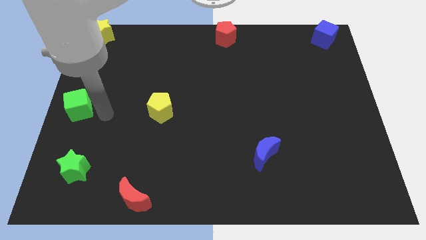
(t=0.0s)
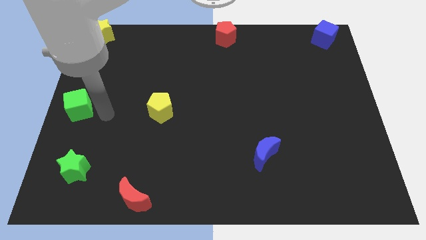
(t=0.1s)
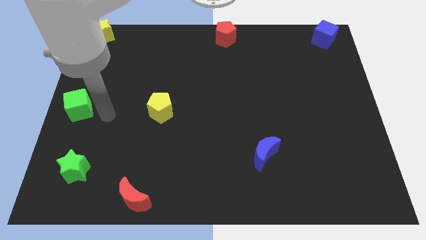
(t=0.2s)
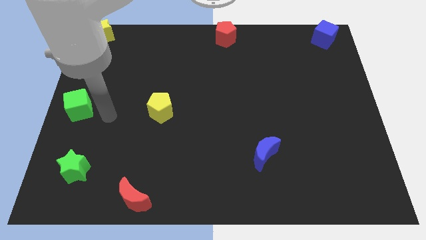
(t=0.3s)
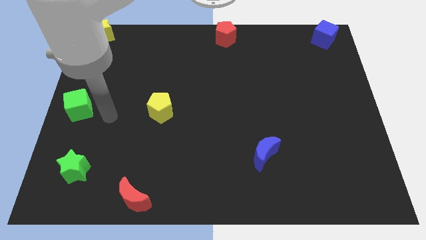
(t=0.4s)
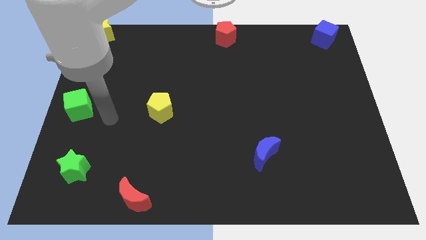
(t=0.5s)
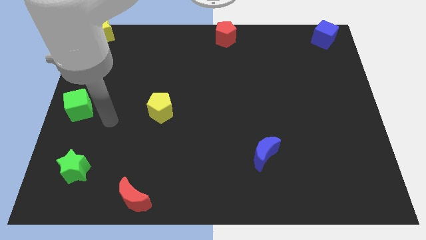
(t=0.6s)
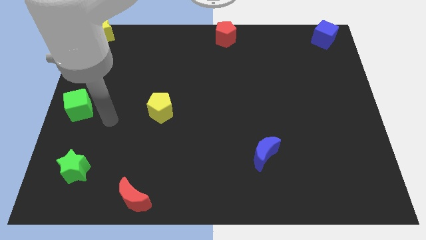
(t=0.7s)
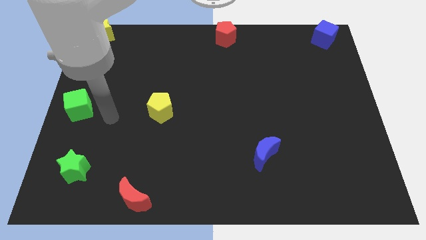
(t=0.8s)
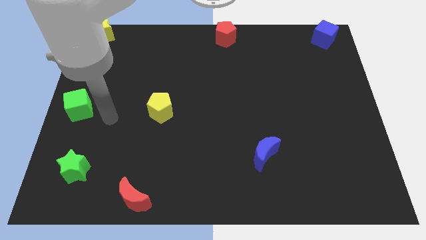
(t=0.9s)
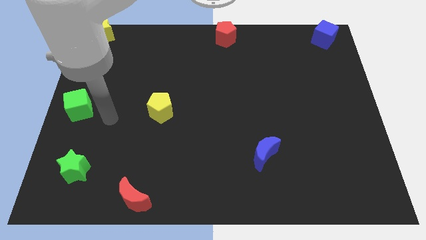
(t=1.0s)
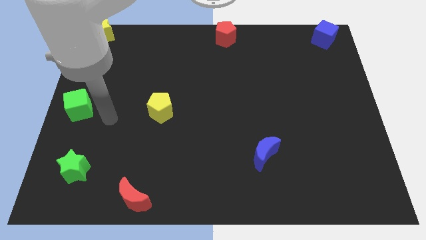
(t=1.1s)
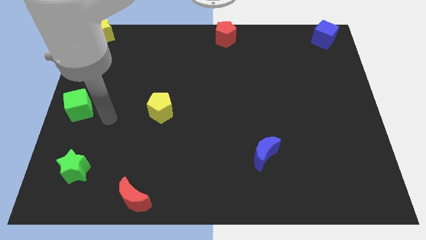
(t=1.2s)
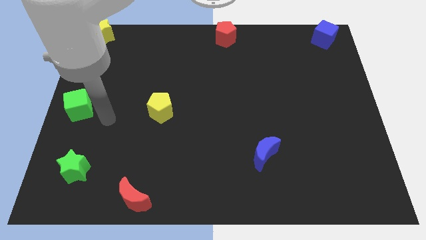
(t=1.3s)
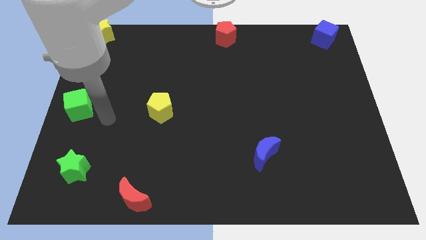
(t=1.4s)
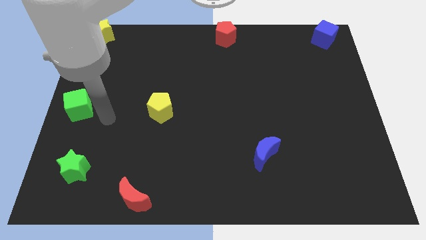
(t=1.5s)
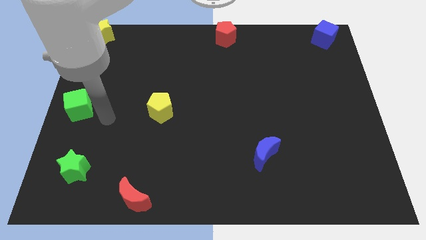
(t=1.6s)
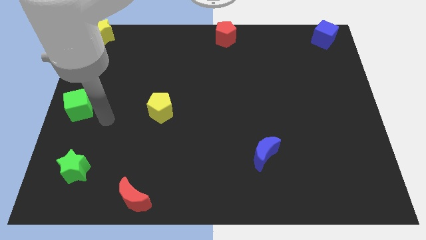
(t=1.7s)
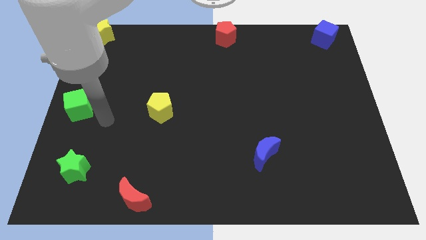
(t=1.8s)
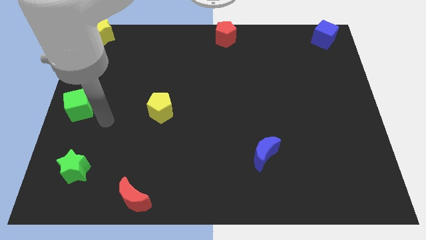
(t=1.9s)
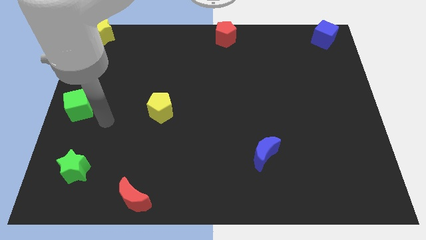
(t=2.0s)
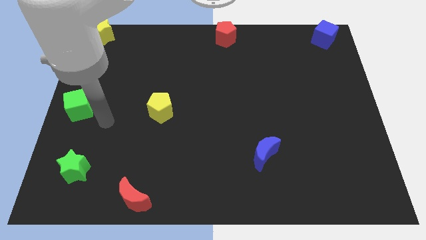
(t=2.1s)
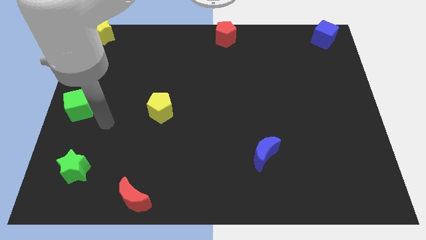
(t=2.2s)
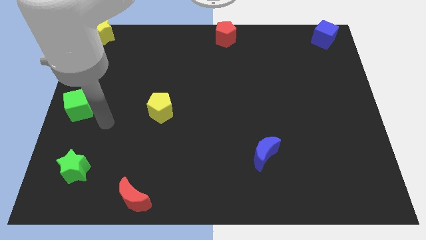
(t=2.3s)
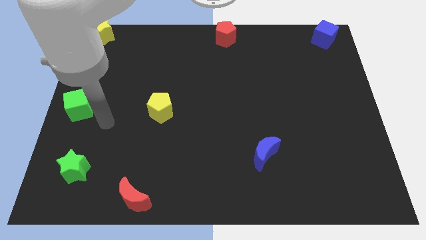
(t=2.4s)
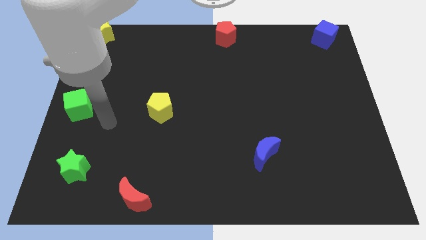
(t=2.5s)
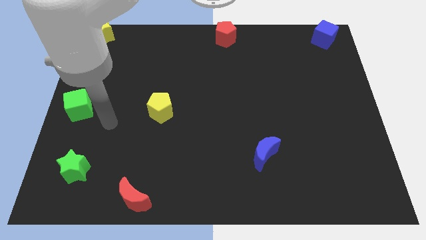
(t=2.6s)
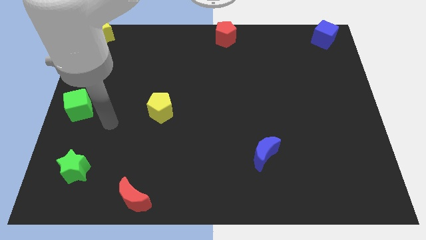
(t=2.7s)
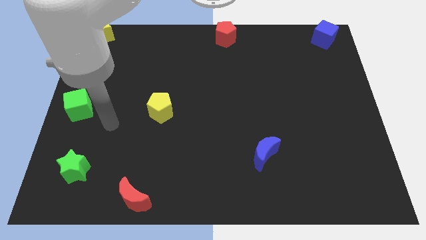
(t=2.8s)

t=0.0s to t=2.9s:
move the arm away from the green cube

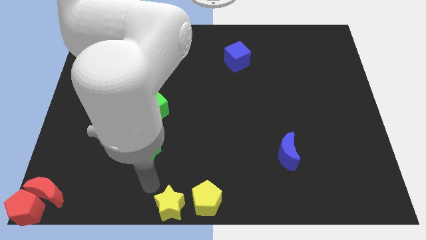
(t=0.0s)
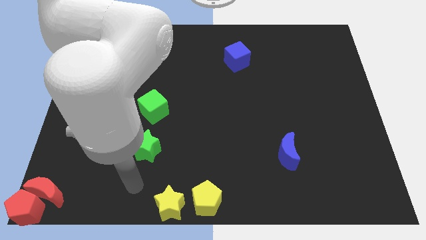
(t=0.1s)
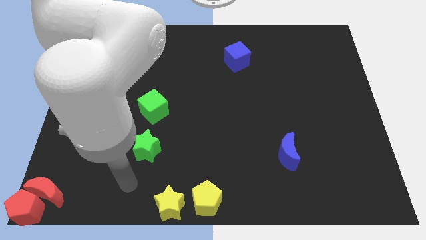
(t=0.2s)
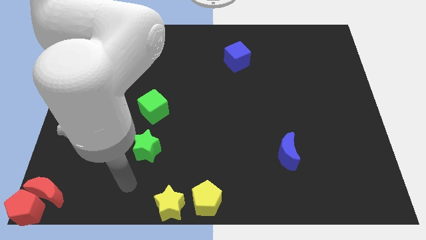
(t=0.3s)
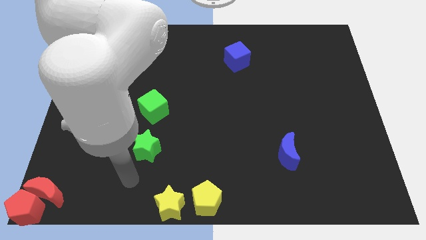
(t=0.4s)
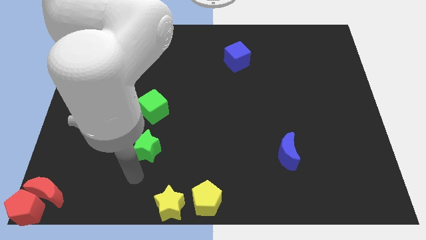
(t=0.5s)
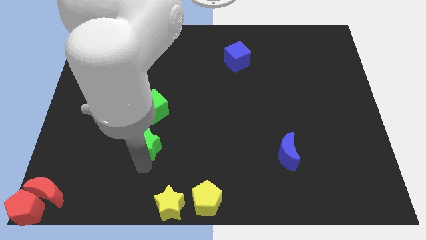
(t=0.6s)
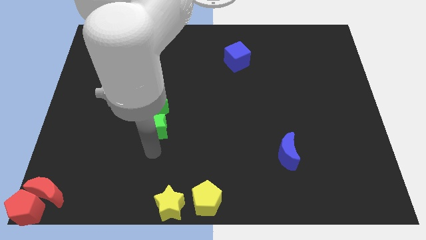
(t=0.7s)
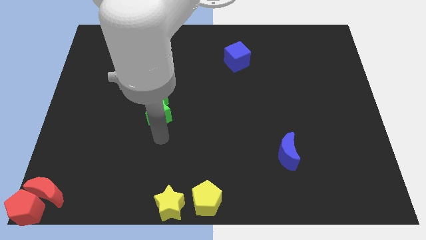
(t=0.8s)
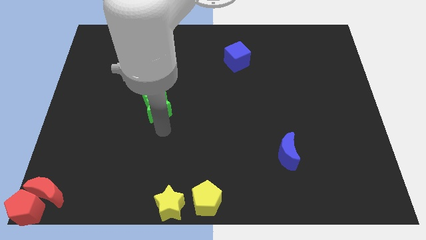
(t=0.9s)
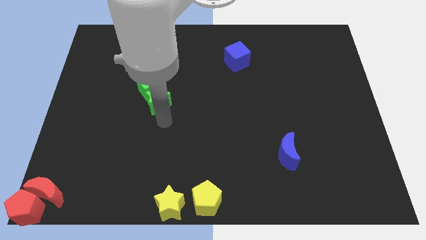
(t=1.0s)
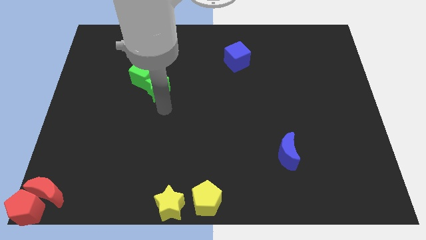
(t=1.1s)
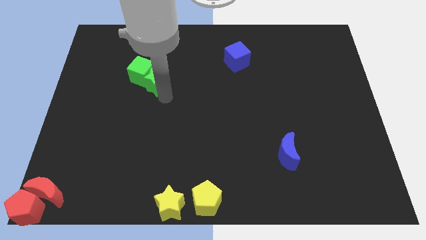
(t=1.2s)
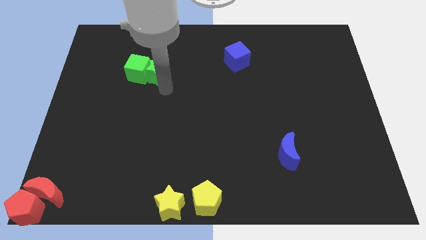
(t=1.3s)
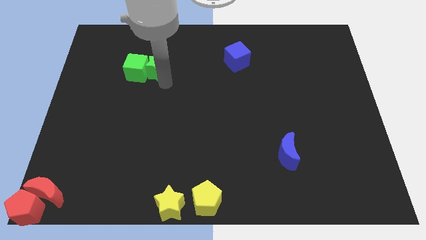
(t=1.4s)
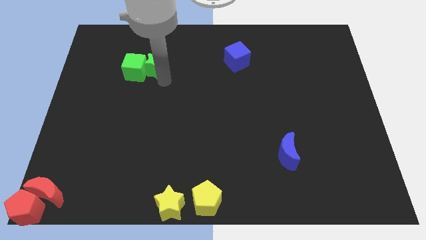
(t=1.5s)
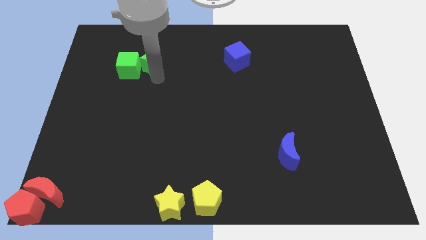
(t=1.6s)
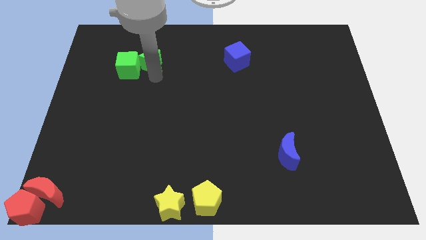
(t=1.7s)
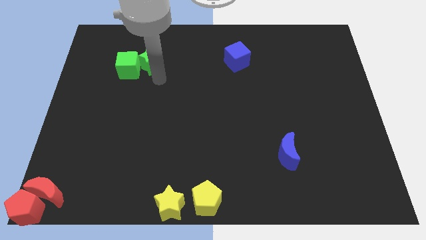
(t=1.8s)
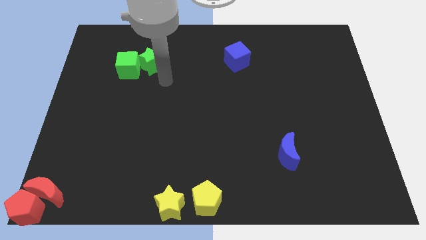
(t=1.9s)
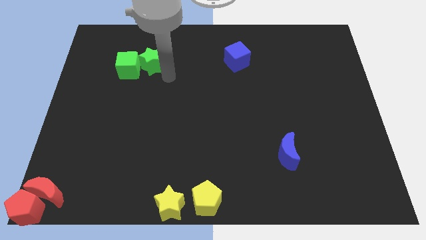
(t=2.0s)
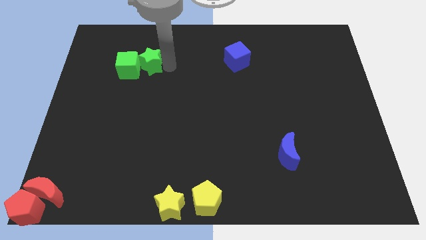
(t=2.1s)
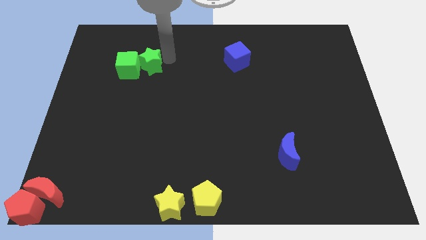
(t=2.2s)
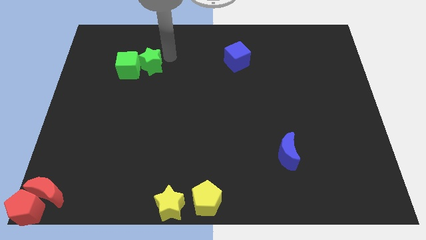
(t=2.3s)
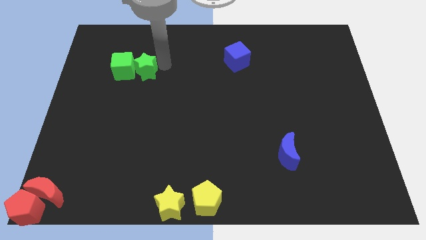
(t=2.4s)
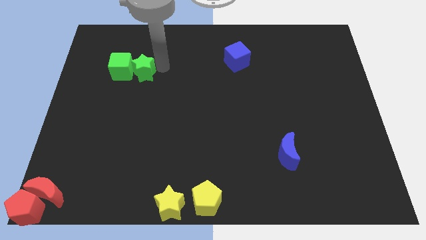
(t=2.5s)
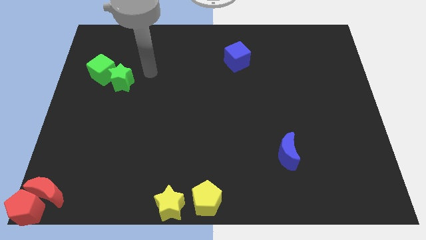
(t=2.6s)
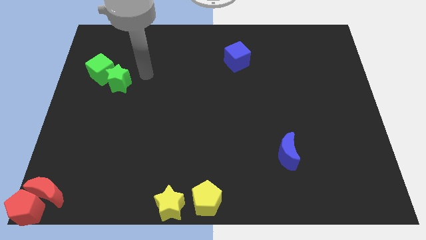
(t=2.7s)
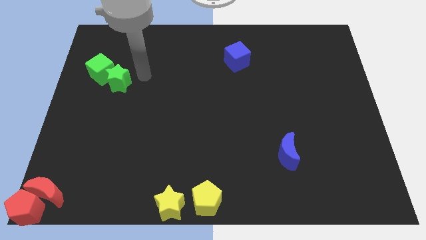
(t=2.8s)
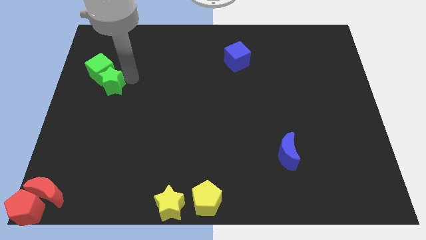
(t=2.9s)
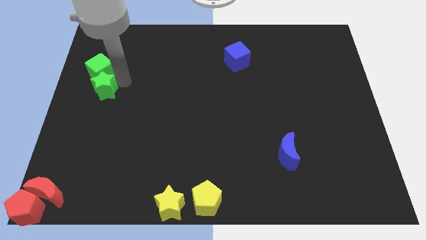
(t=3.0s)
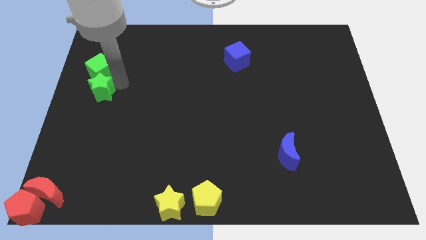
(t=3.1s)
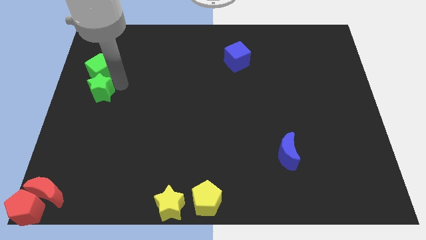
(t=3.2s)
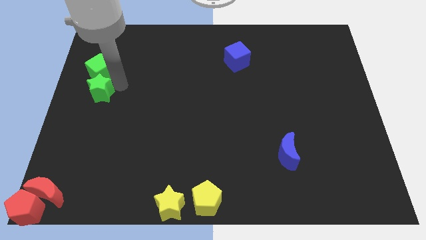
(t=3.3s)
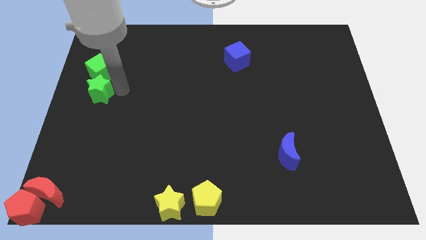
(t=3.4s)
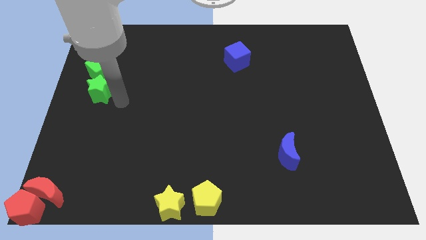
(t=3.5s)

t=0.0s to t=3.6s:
push the green cube to the horizontal left side of the blue cube

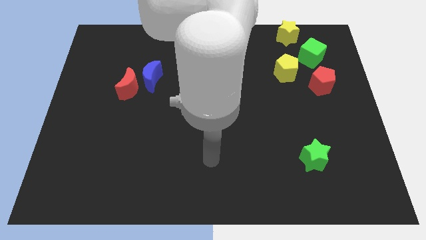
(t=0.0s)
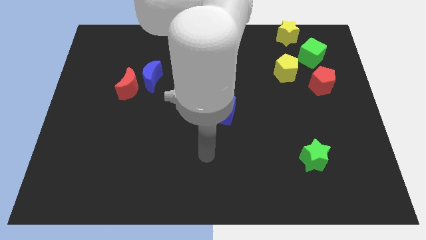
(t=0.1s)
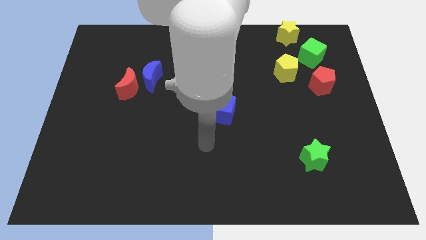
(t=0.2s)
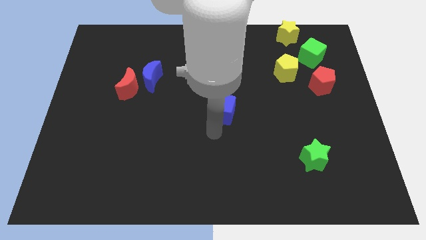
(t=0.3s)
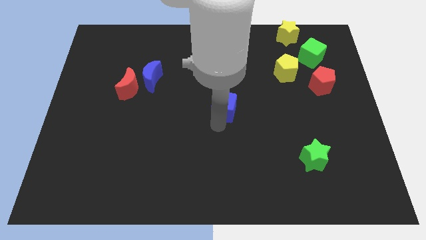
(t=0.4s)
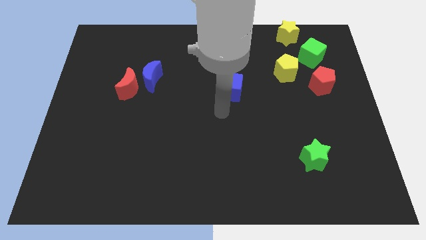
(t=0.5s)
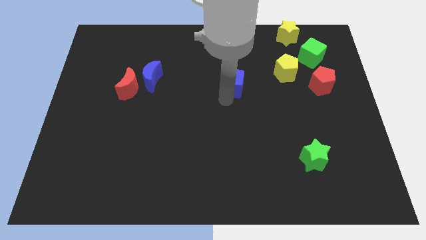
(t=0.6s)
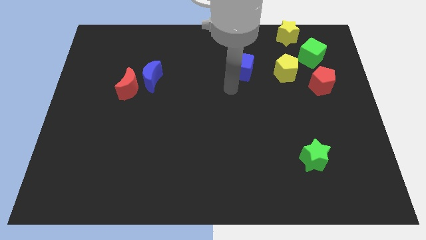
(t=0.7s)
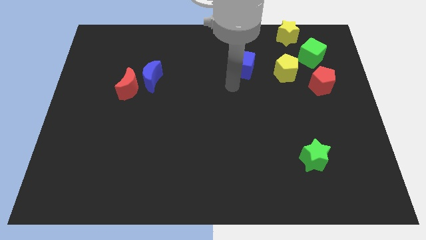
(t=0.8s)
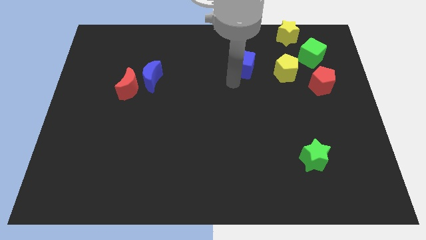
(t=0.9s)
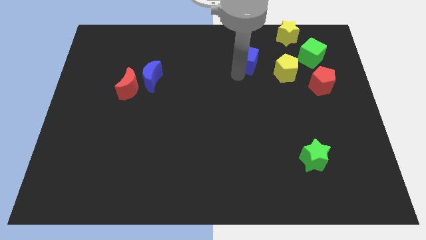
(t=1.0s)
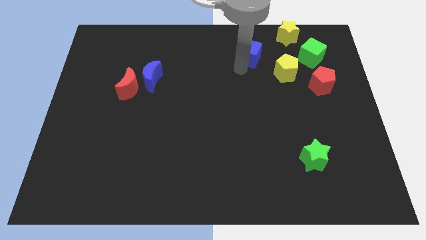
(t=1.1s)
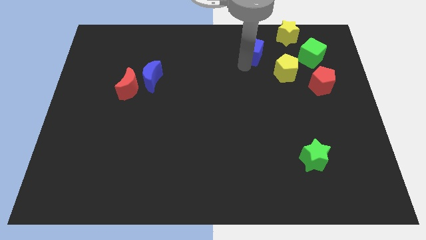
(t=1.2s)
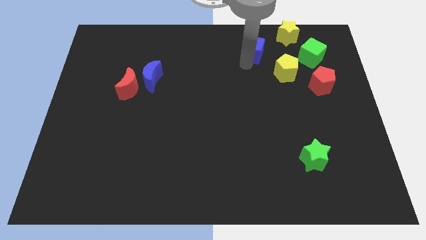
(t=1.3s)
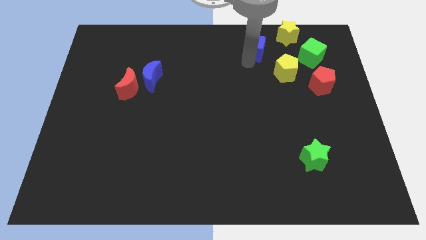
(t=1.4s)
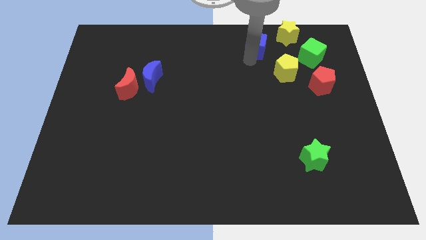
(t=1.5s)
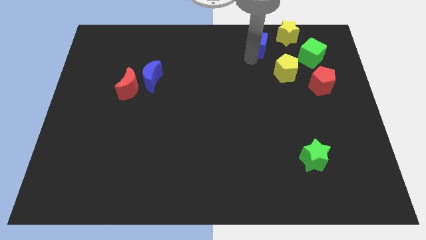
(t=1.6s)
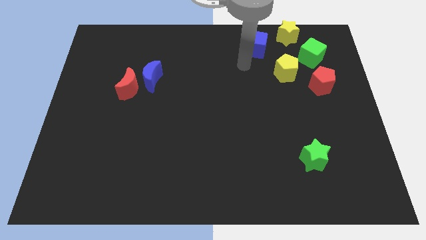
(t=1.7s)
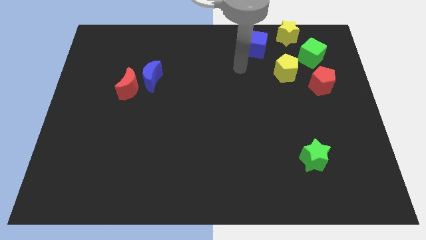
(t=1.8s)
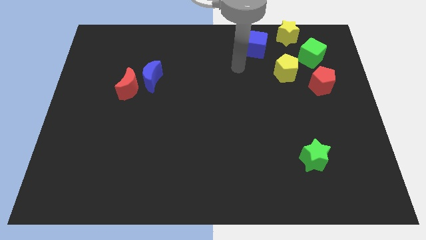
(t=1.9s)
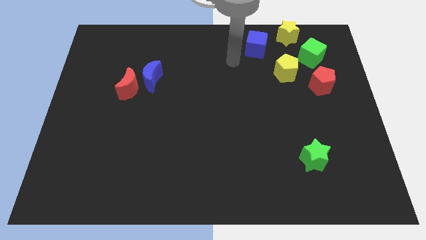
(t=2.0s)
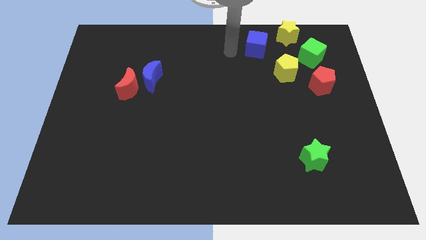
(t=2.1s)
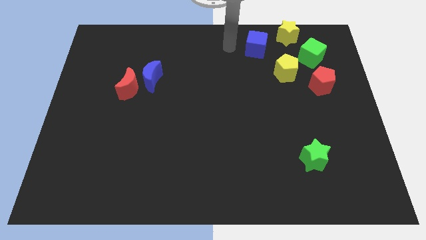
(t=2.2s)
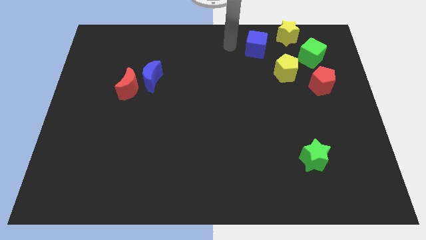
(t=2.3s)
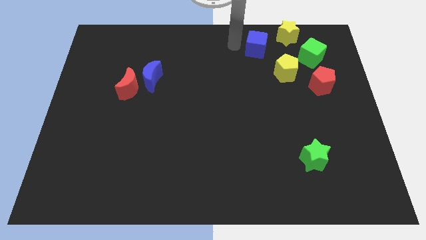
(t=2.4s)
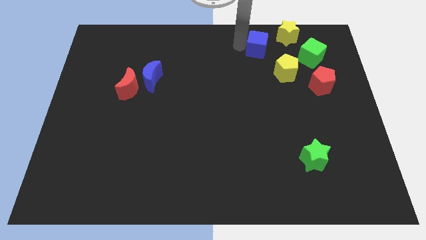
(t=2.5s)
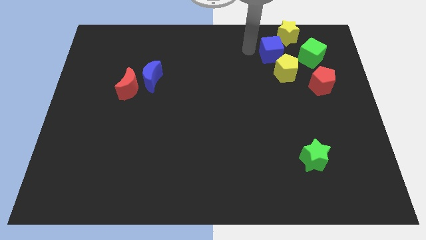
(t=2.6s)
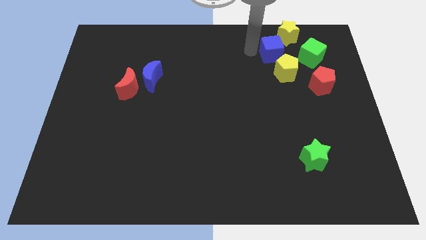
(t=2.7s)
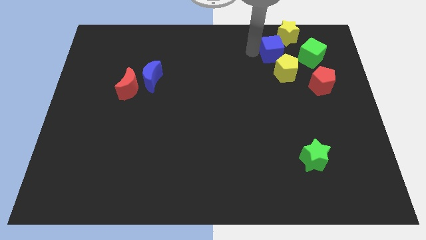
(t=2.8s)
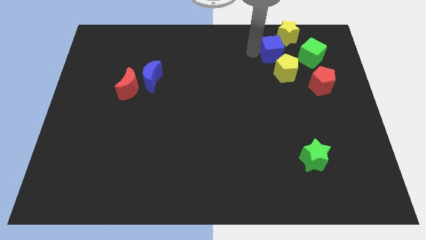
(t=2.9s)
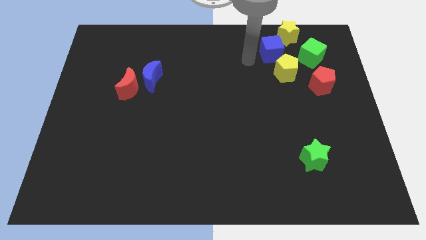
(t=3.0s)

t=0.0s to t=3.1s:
move the blue cube at the bottom left of the yellow star
